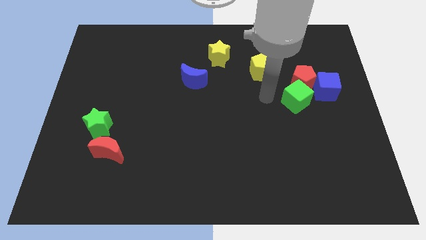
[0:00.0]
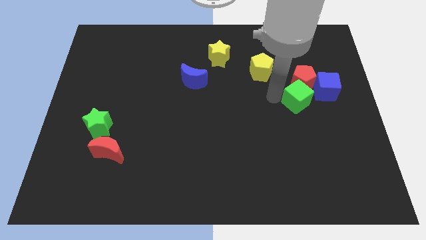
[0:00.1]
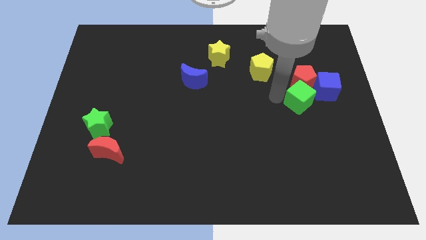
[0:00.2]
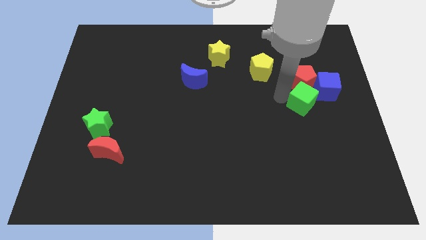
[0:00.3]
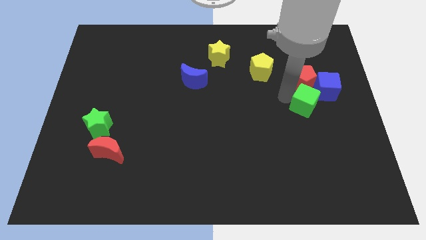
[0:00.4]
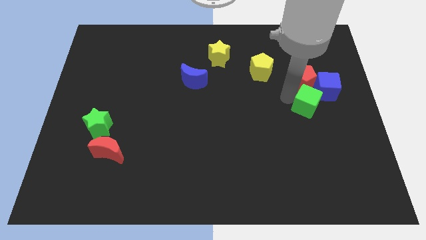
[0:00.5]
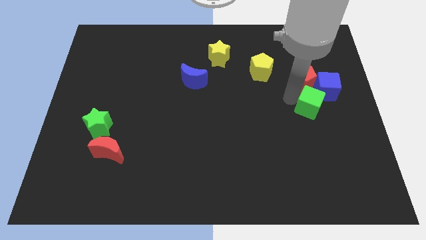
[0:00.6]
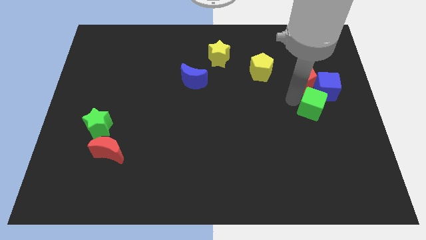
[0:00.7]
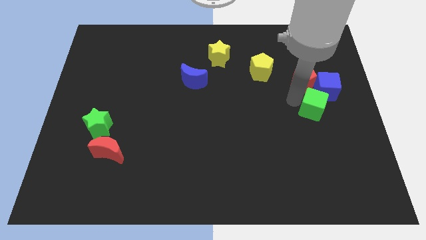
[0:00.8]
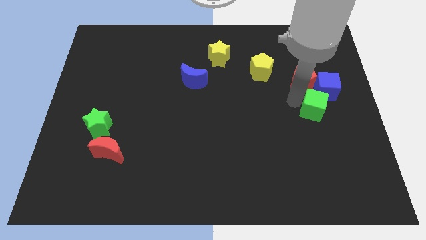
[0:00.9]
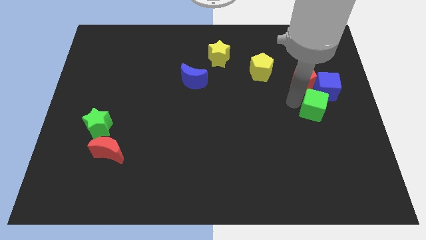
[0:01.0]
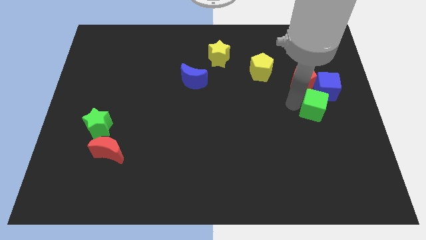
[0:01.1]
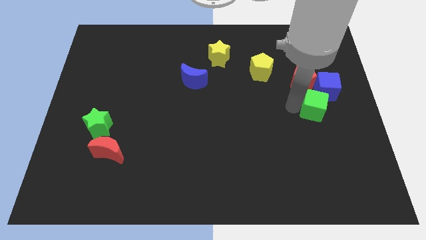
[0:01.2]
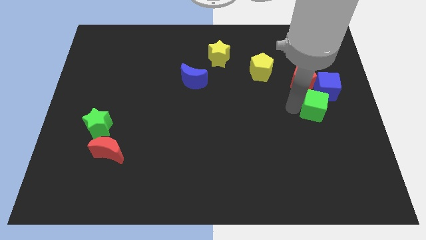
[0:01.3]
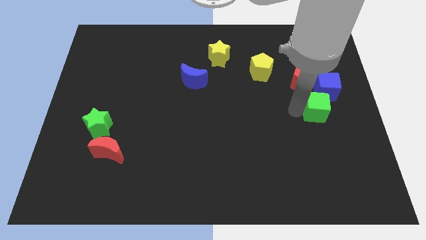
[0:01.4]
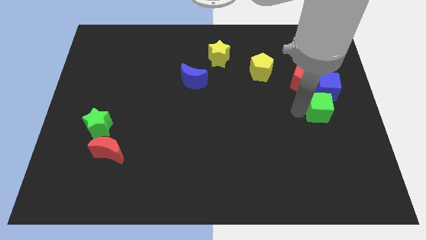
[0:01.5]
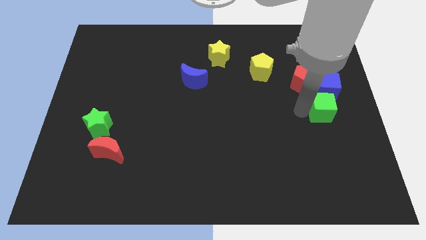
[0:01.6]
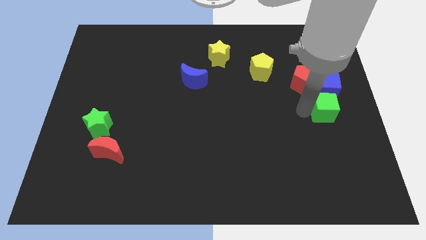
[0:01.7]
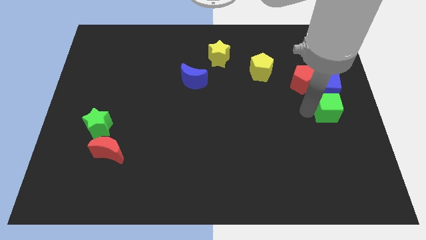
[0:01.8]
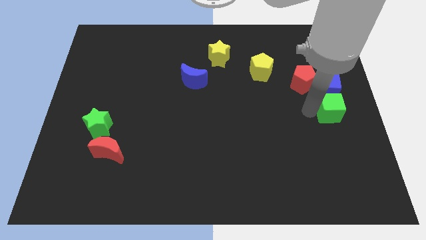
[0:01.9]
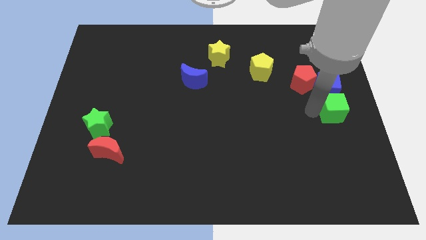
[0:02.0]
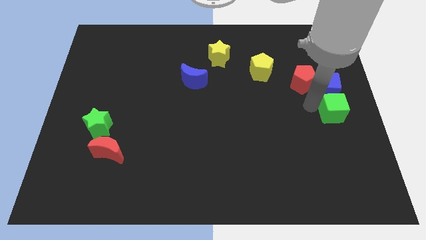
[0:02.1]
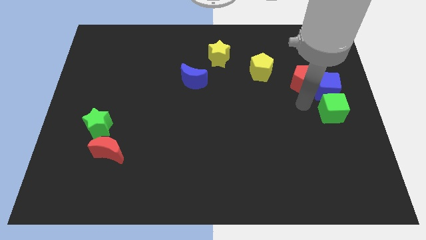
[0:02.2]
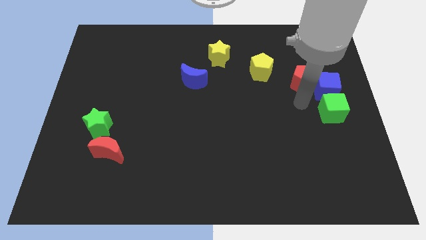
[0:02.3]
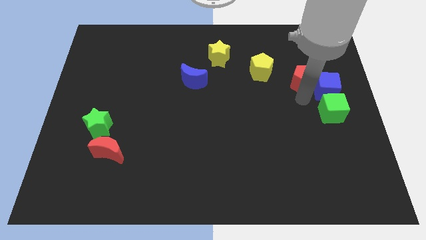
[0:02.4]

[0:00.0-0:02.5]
push the green cube to the bottom side of the blue cube

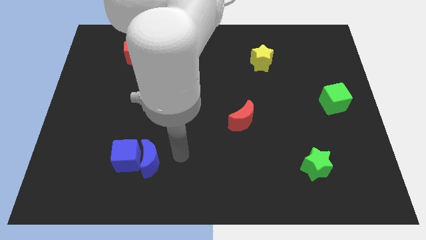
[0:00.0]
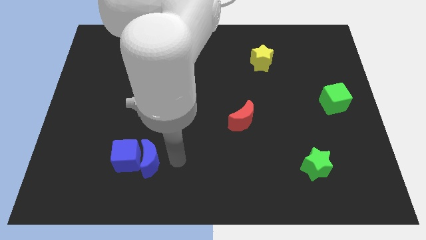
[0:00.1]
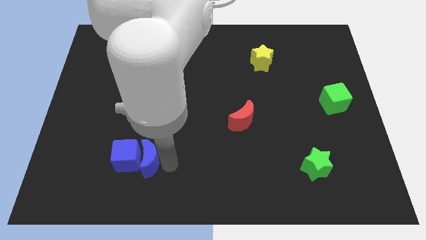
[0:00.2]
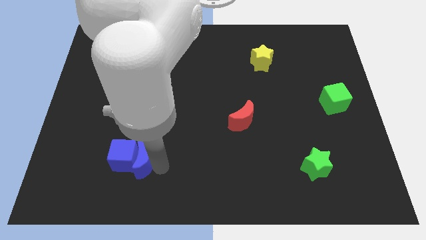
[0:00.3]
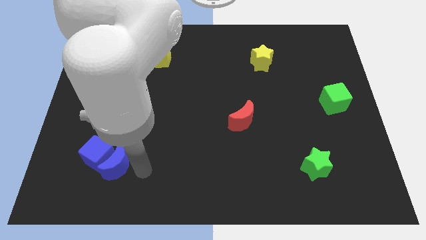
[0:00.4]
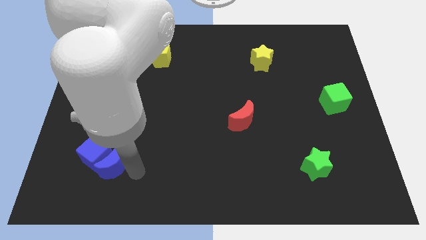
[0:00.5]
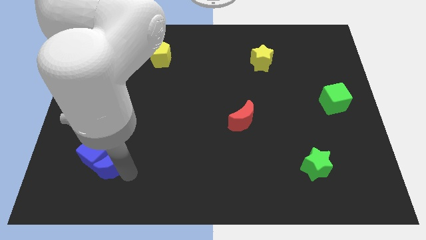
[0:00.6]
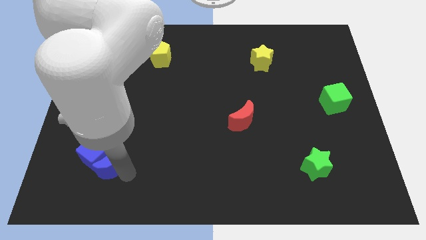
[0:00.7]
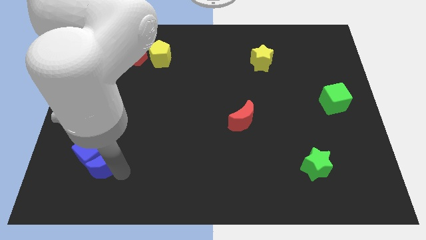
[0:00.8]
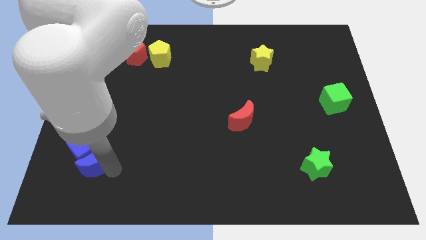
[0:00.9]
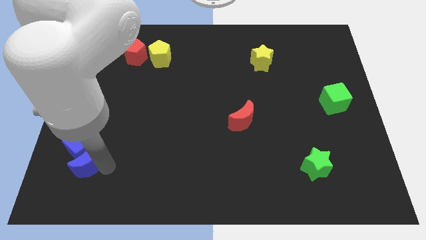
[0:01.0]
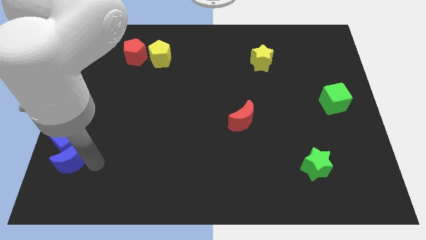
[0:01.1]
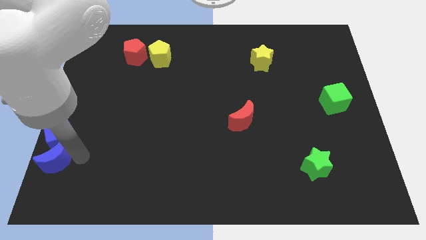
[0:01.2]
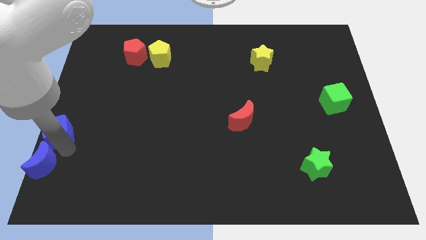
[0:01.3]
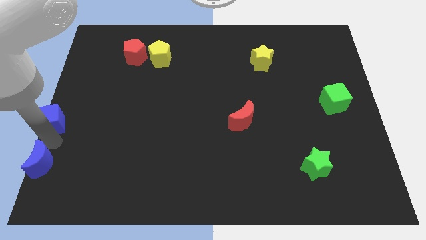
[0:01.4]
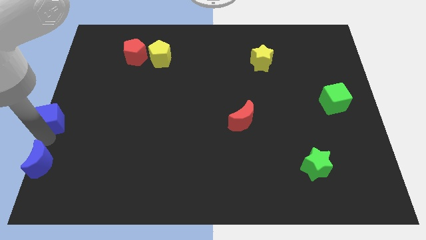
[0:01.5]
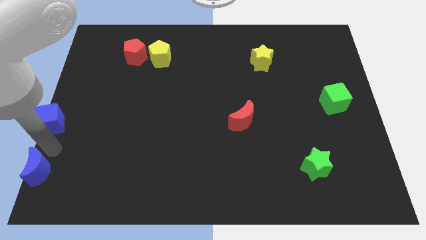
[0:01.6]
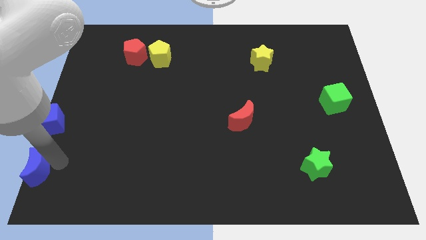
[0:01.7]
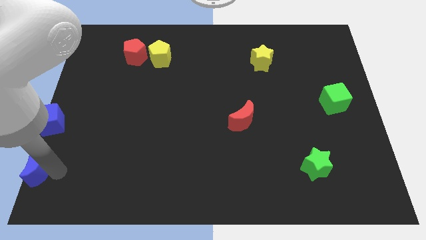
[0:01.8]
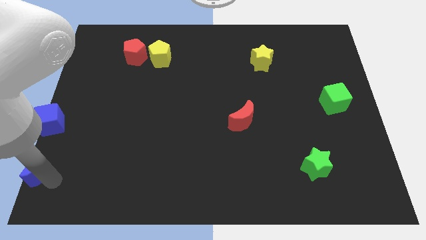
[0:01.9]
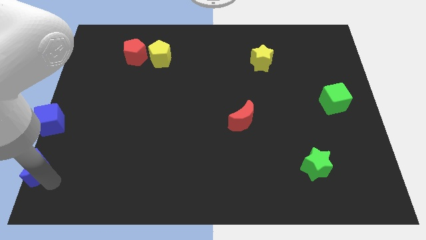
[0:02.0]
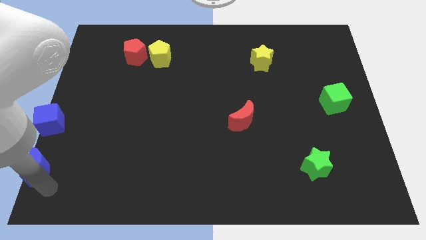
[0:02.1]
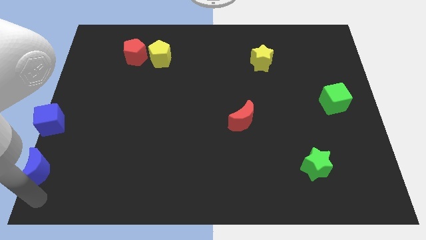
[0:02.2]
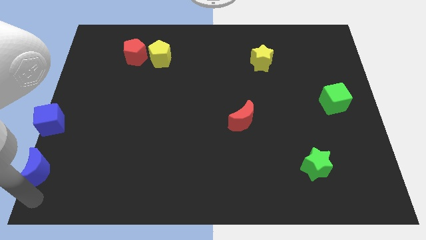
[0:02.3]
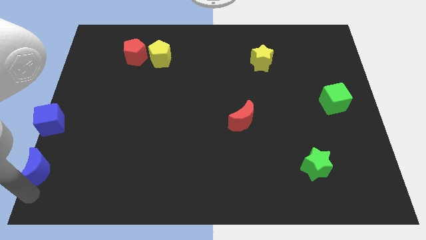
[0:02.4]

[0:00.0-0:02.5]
push the blue crescent towards left

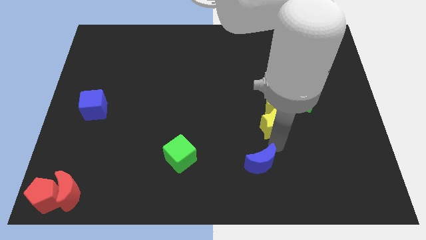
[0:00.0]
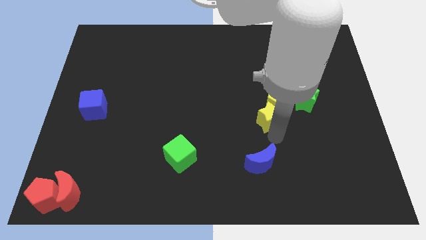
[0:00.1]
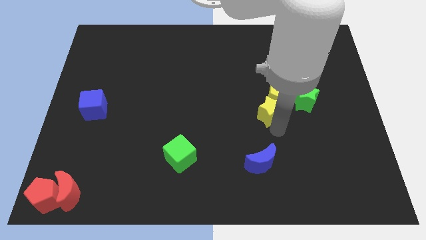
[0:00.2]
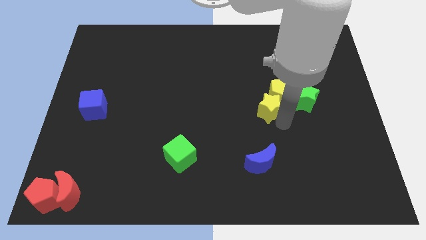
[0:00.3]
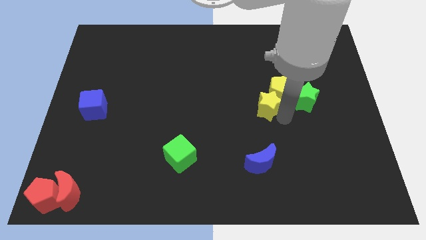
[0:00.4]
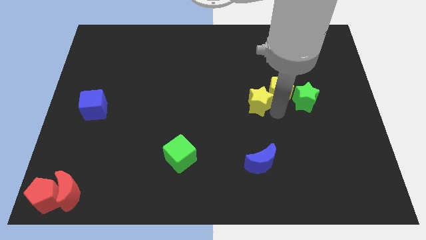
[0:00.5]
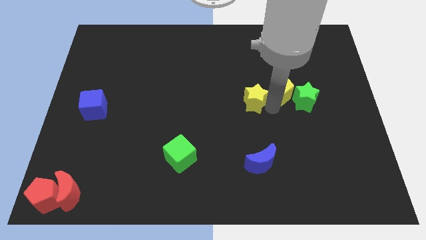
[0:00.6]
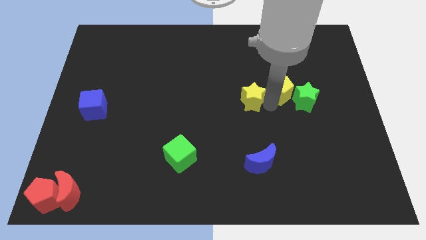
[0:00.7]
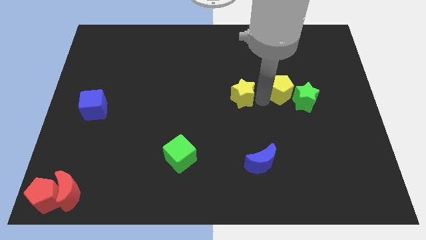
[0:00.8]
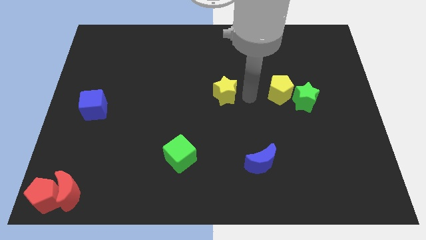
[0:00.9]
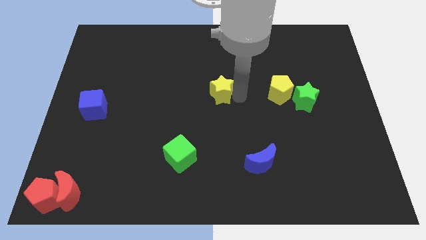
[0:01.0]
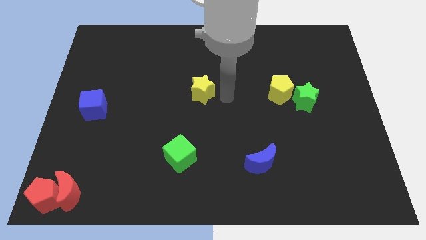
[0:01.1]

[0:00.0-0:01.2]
put the yellow star at the center of the board

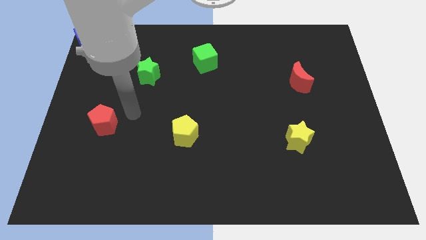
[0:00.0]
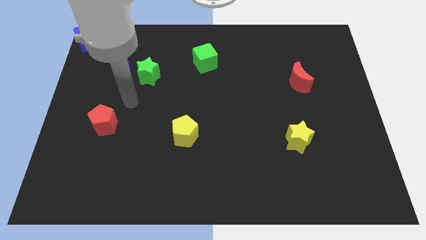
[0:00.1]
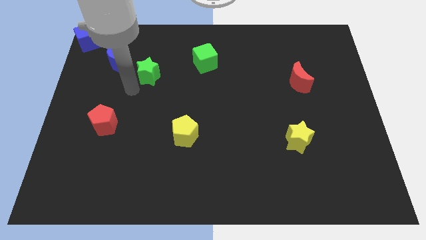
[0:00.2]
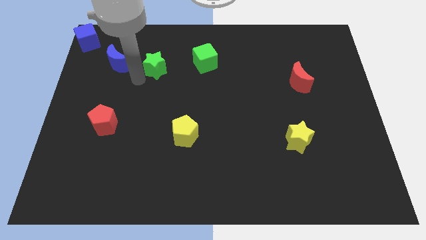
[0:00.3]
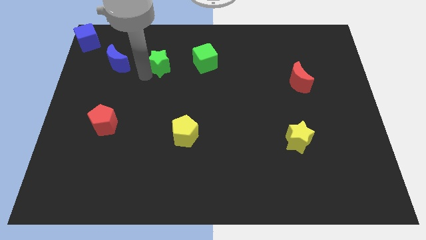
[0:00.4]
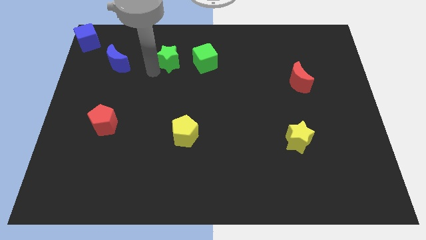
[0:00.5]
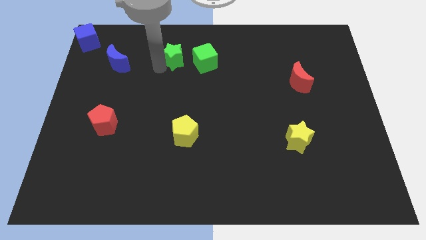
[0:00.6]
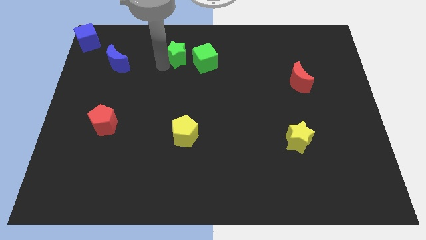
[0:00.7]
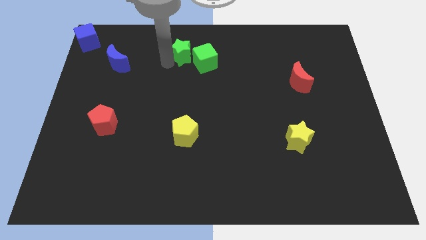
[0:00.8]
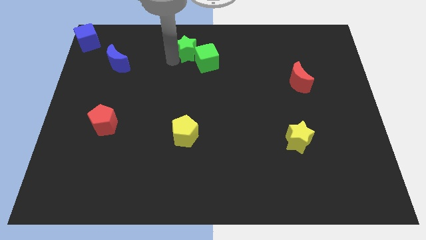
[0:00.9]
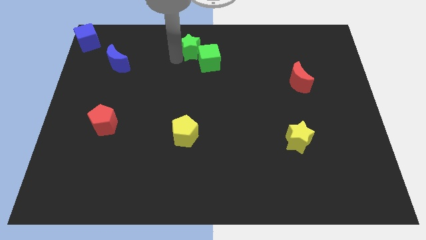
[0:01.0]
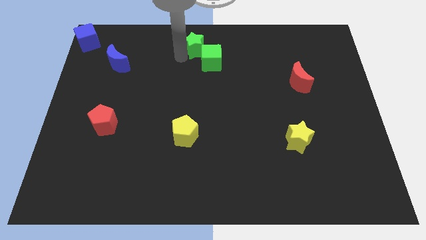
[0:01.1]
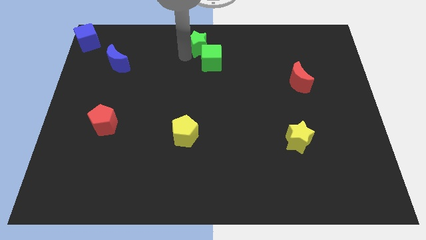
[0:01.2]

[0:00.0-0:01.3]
push the green star into the green cube

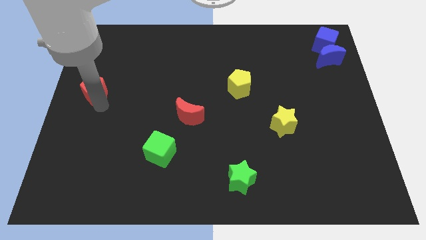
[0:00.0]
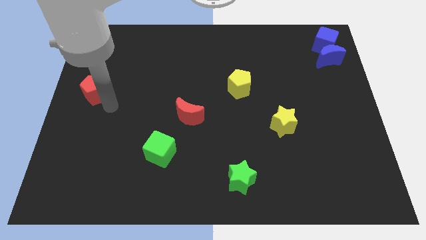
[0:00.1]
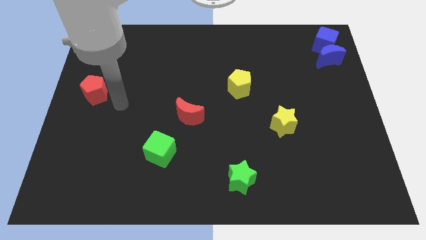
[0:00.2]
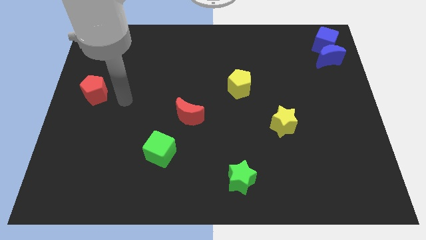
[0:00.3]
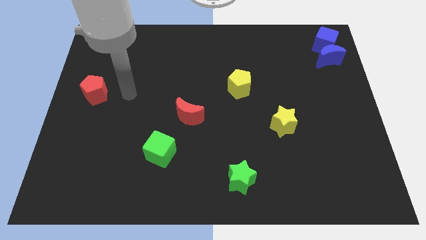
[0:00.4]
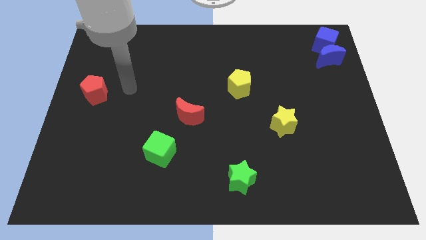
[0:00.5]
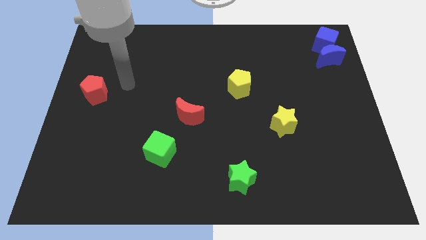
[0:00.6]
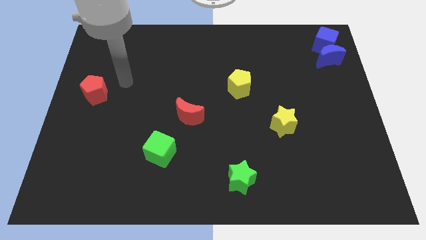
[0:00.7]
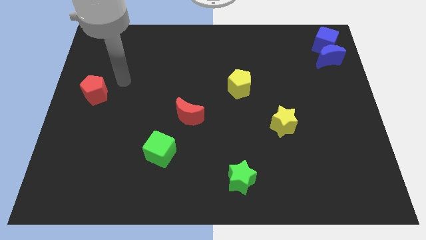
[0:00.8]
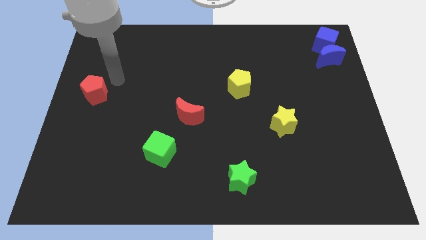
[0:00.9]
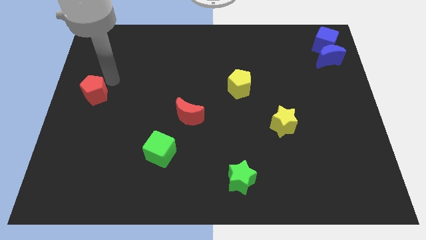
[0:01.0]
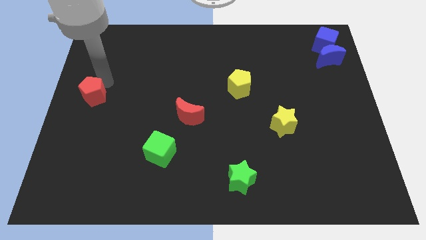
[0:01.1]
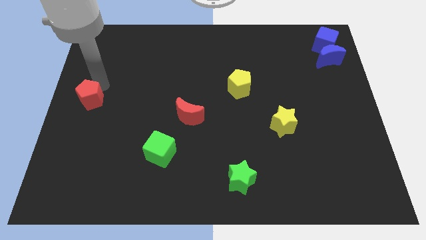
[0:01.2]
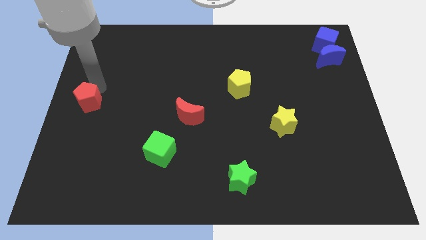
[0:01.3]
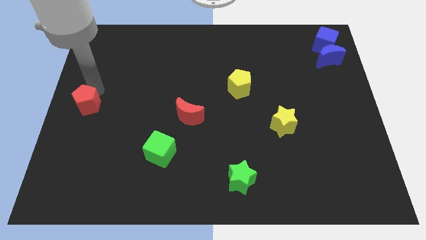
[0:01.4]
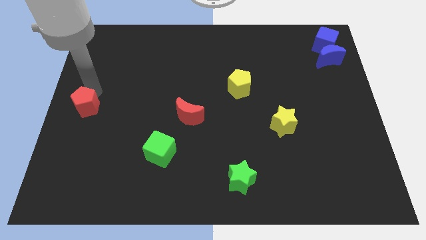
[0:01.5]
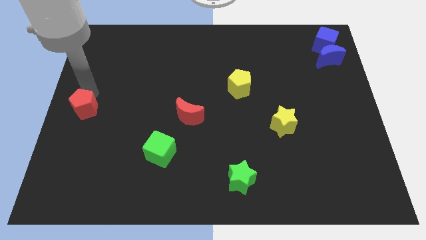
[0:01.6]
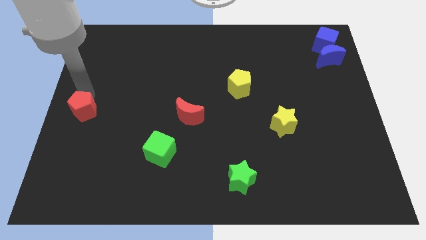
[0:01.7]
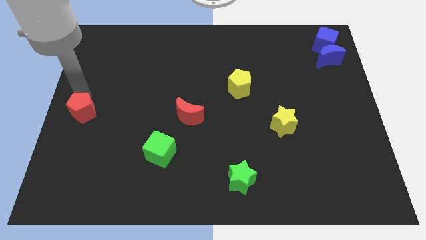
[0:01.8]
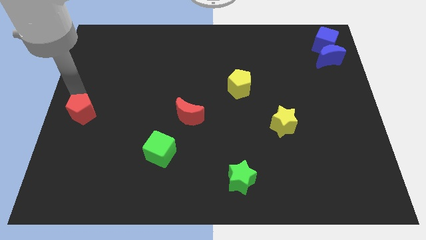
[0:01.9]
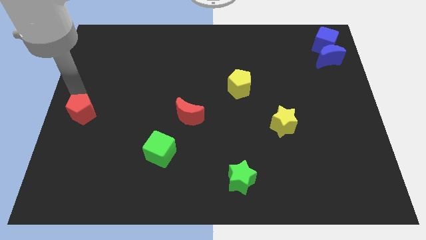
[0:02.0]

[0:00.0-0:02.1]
place the red pentagon at the left center of the board
